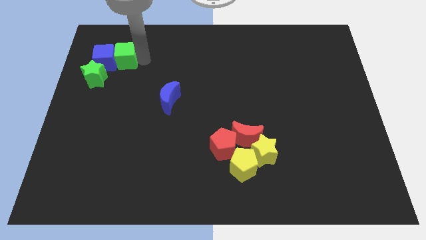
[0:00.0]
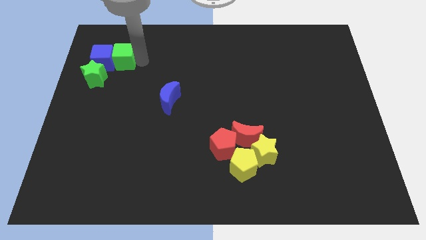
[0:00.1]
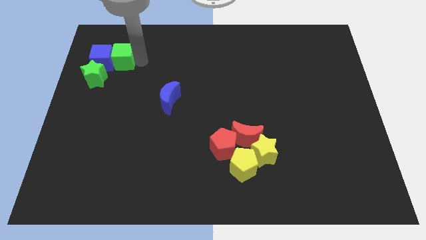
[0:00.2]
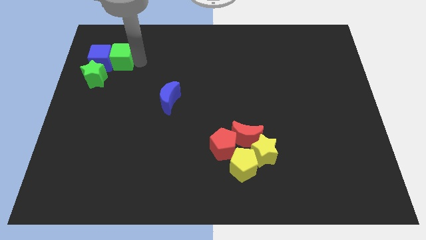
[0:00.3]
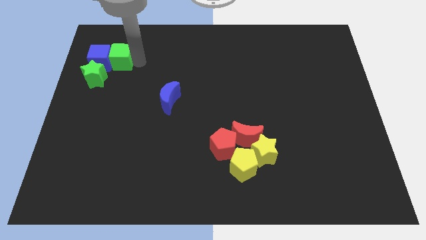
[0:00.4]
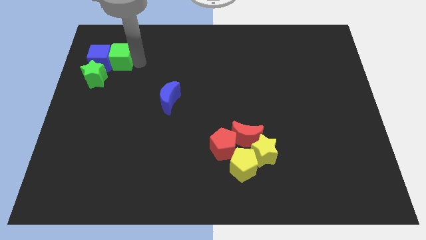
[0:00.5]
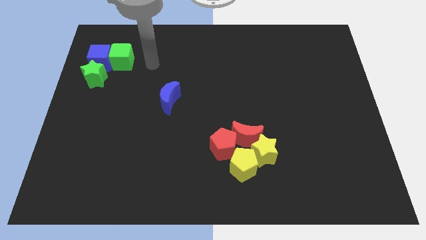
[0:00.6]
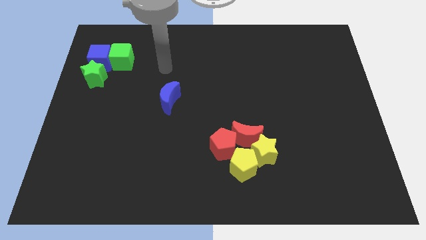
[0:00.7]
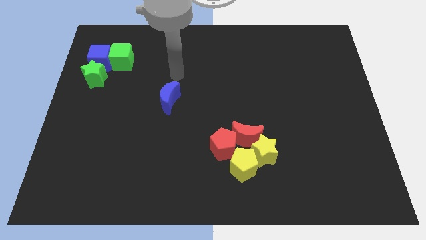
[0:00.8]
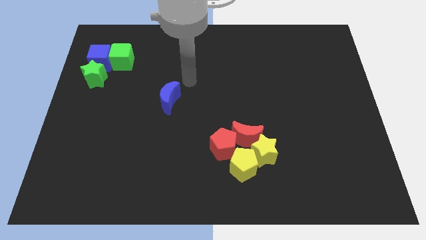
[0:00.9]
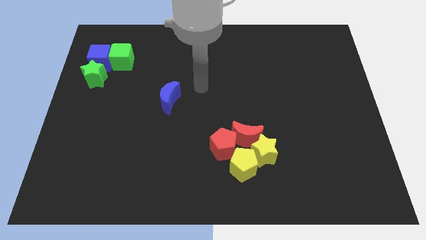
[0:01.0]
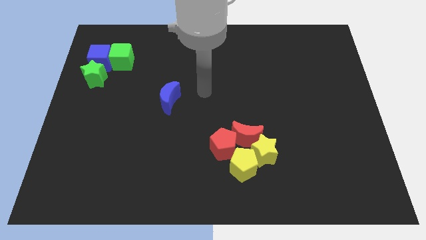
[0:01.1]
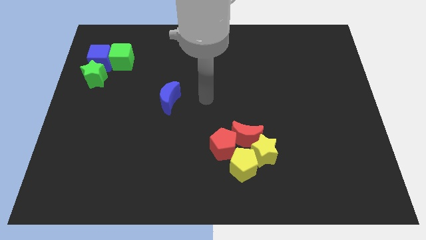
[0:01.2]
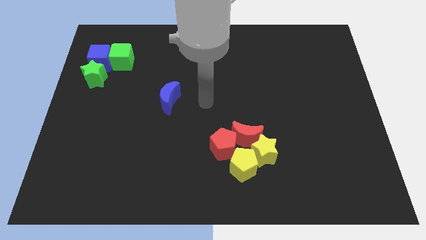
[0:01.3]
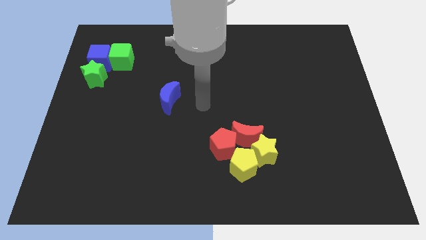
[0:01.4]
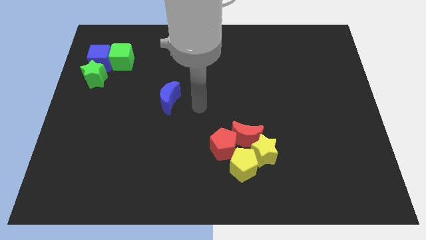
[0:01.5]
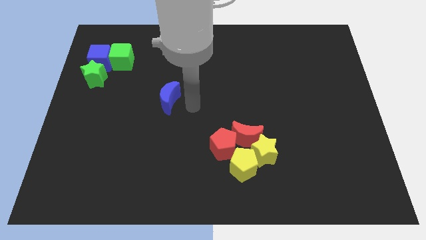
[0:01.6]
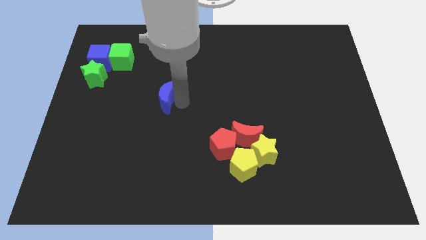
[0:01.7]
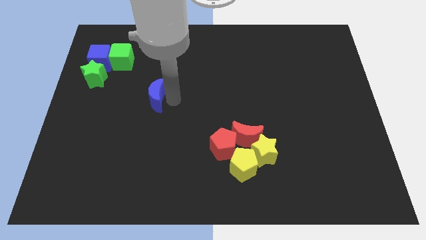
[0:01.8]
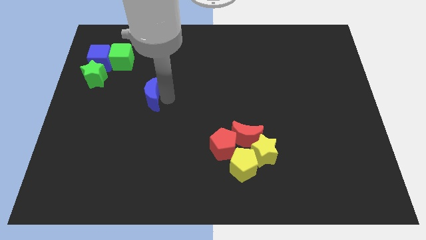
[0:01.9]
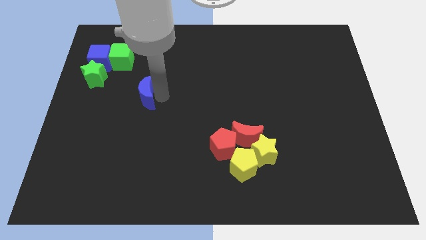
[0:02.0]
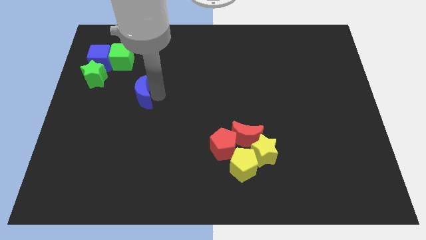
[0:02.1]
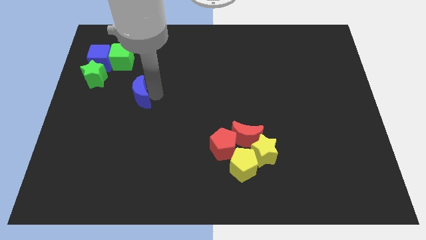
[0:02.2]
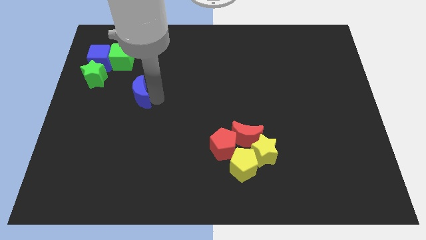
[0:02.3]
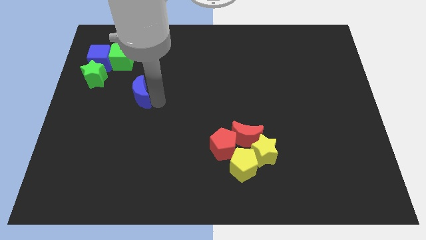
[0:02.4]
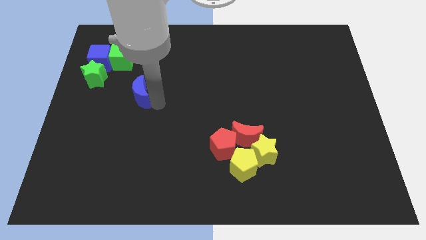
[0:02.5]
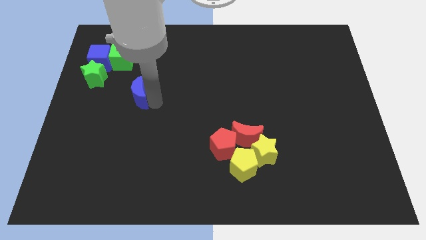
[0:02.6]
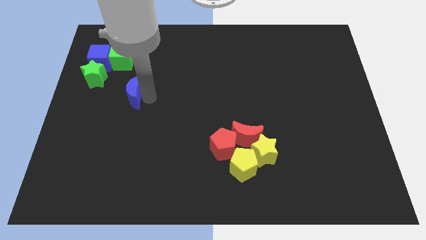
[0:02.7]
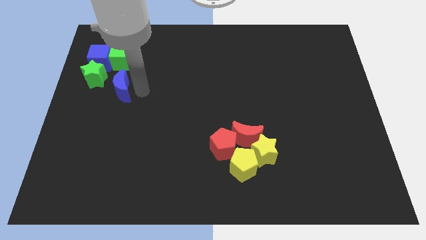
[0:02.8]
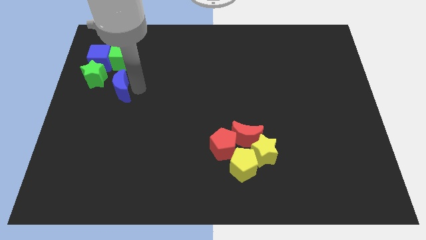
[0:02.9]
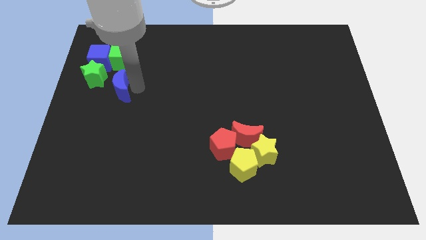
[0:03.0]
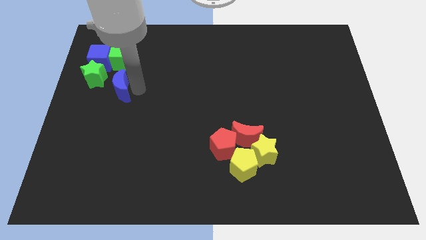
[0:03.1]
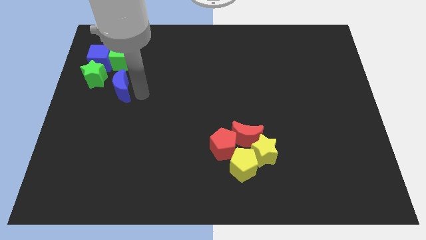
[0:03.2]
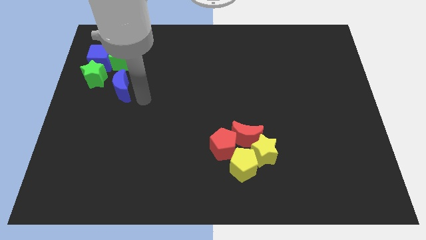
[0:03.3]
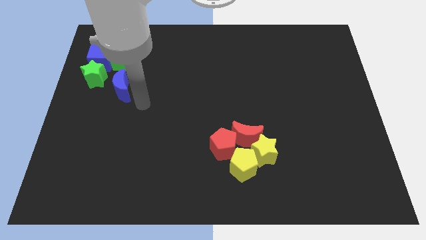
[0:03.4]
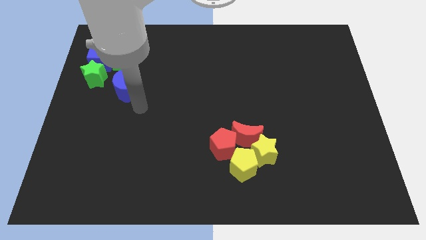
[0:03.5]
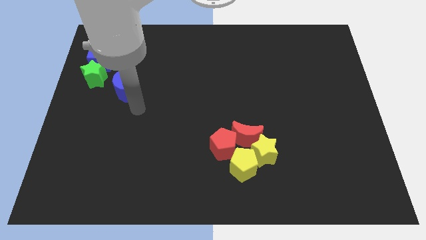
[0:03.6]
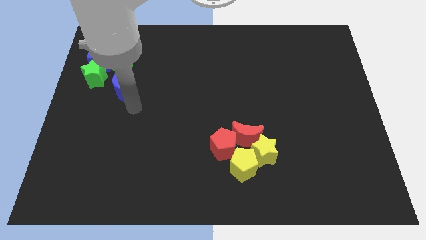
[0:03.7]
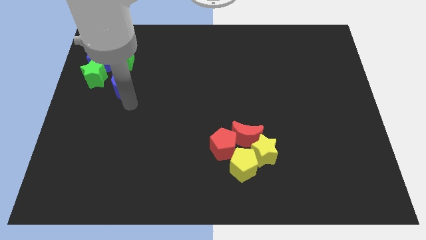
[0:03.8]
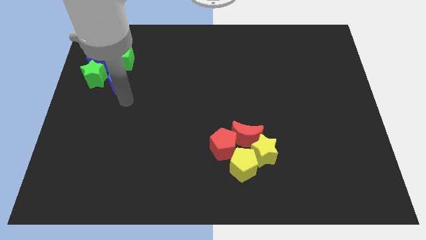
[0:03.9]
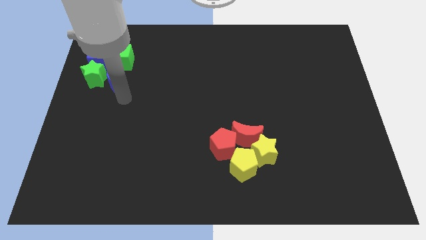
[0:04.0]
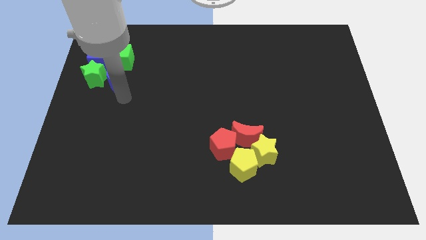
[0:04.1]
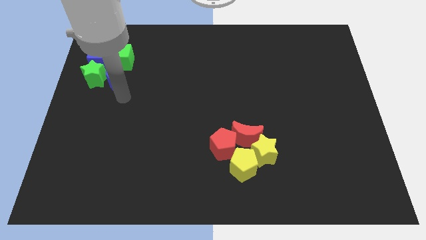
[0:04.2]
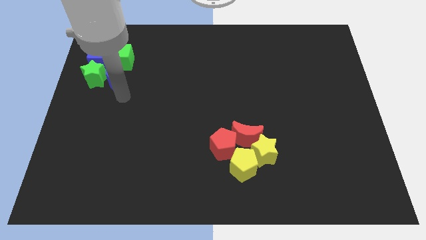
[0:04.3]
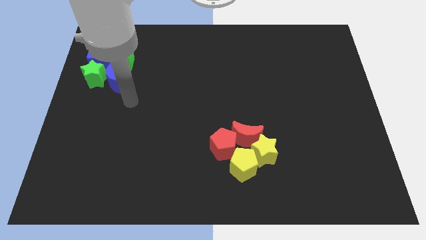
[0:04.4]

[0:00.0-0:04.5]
slide the blue moon to the bottom of the green cube

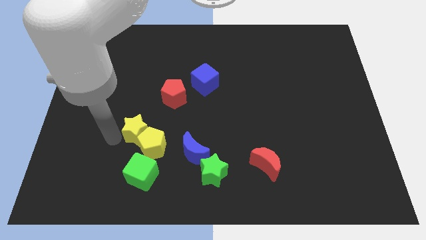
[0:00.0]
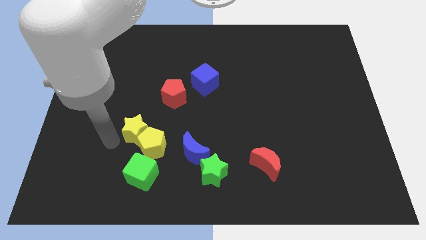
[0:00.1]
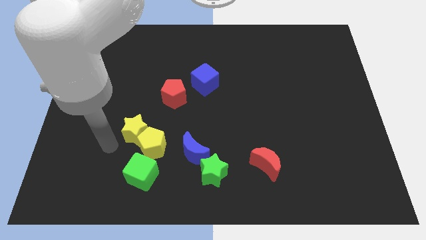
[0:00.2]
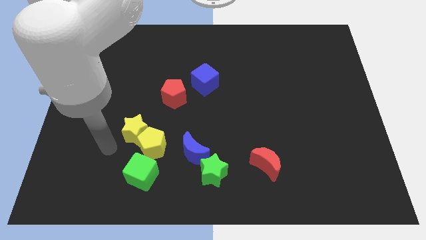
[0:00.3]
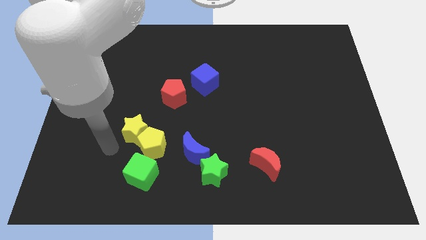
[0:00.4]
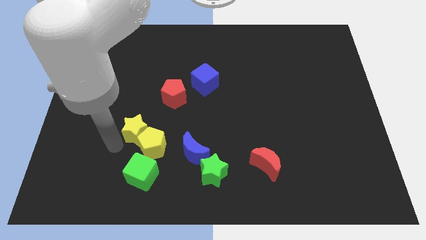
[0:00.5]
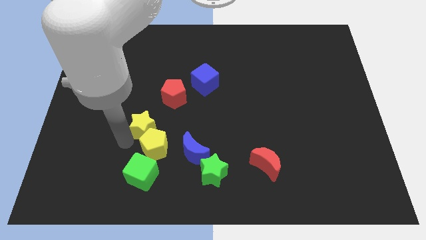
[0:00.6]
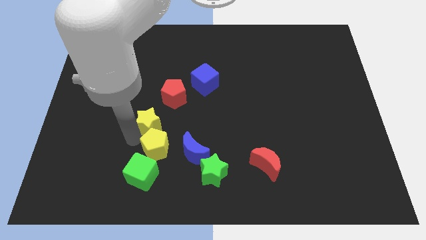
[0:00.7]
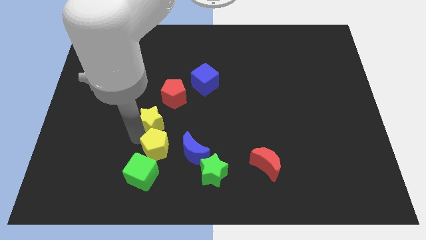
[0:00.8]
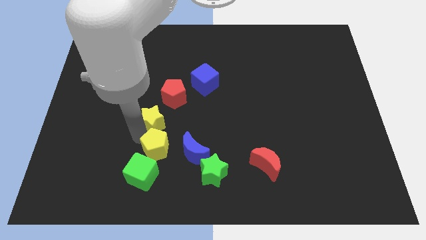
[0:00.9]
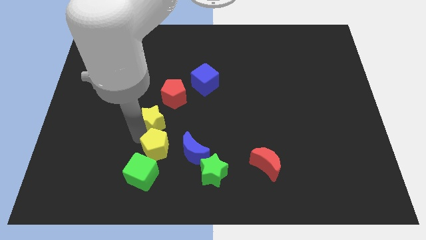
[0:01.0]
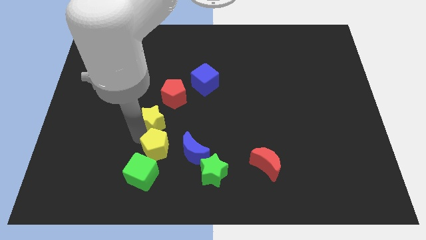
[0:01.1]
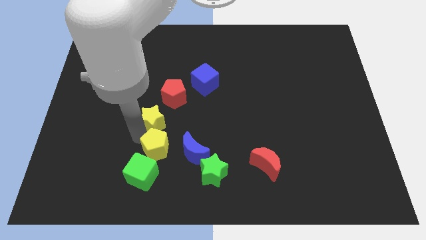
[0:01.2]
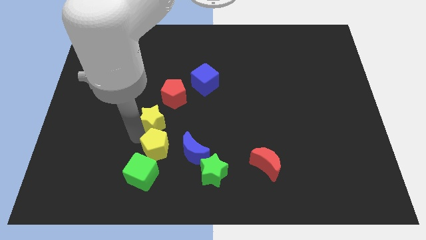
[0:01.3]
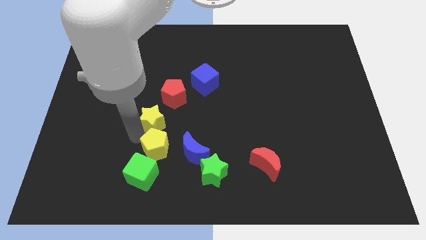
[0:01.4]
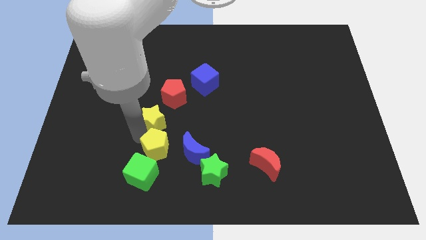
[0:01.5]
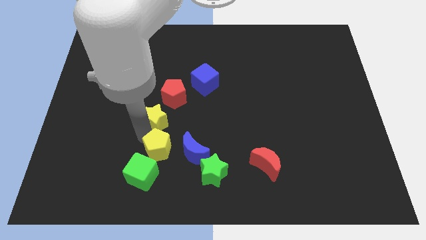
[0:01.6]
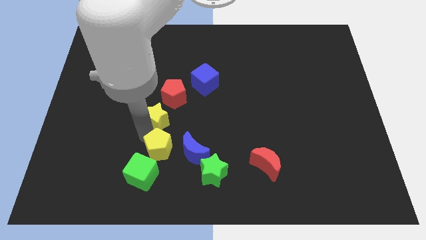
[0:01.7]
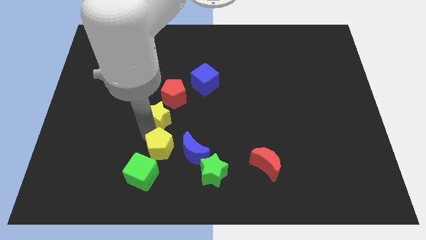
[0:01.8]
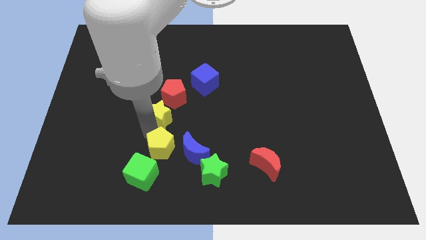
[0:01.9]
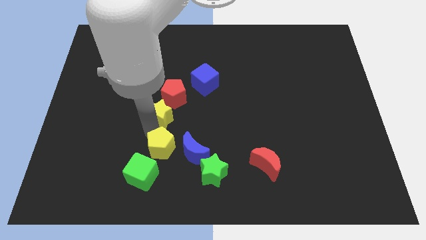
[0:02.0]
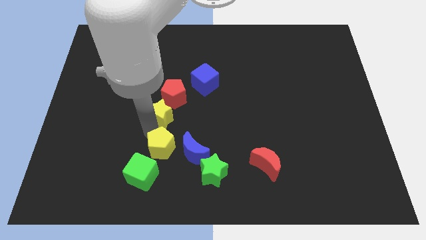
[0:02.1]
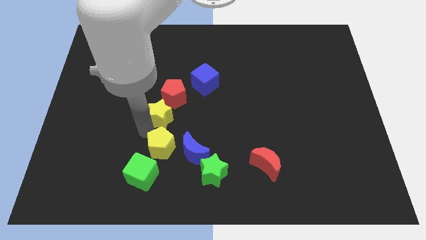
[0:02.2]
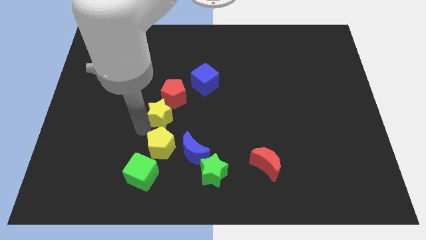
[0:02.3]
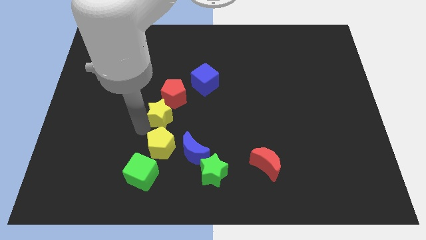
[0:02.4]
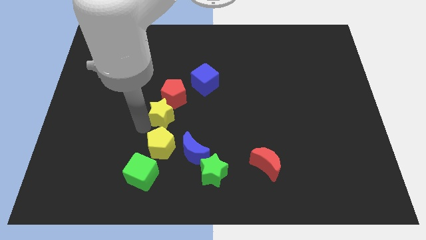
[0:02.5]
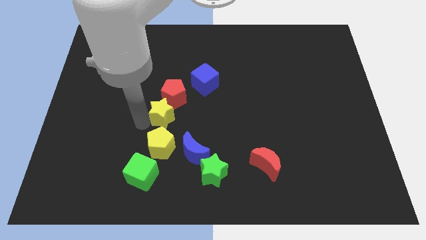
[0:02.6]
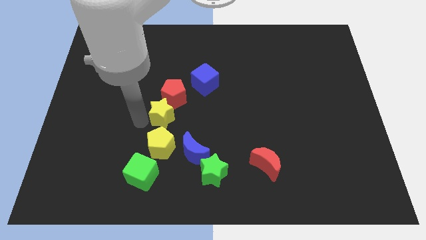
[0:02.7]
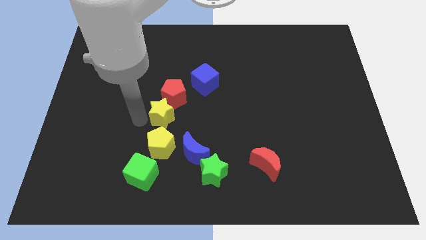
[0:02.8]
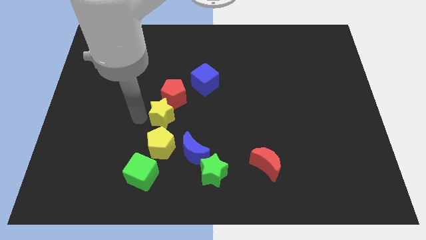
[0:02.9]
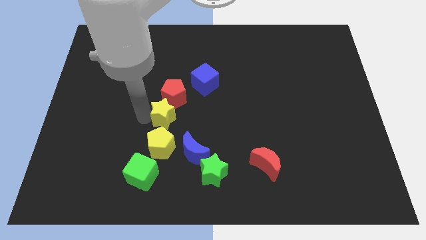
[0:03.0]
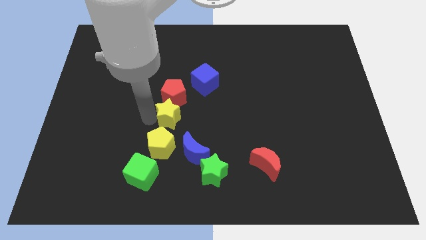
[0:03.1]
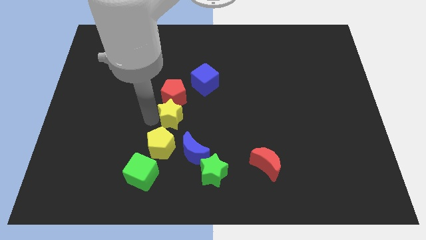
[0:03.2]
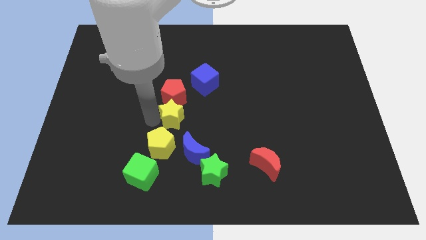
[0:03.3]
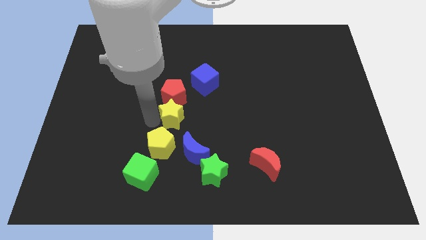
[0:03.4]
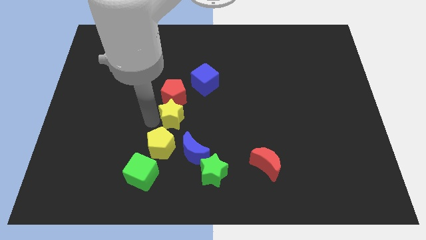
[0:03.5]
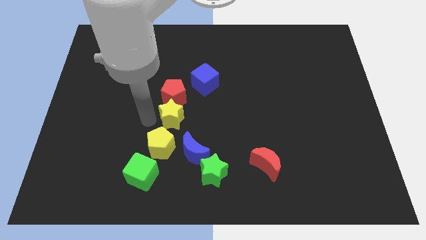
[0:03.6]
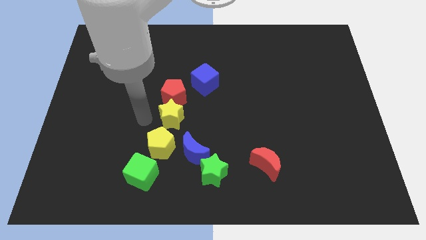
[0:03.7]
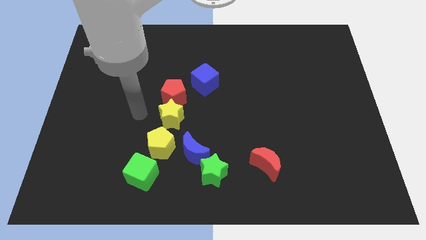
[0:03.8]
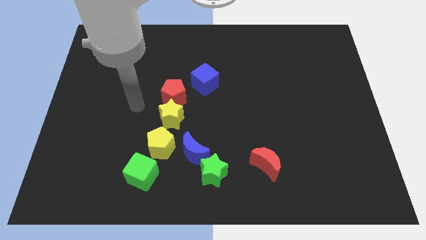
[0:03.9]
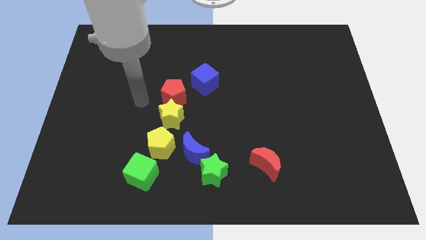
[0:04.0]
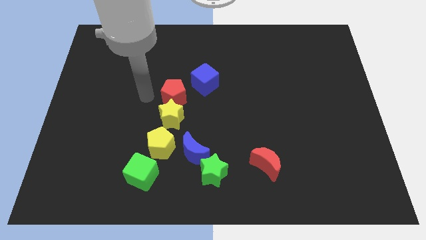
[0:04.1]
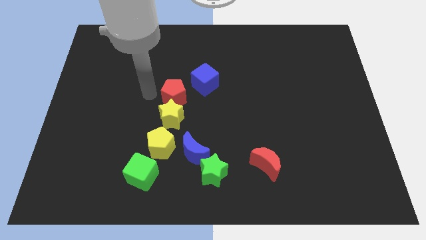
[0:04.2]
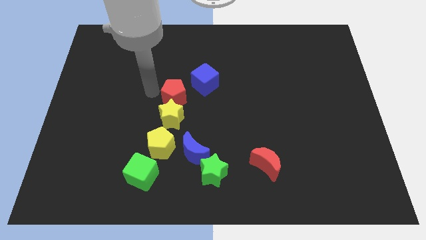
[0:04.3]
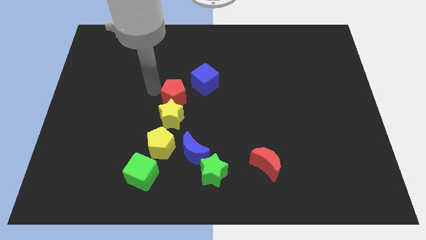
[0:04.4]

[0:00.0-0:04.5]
put the yellow star in between yellow pentagon and red pentagon
